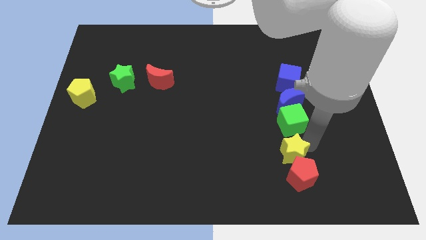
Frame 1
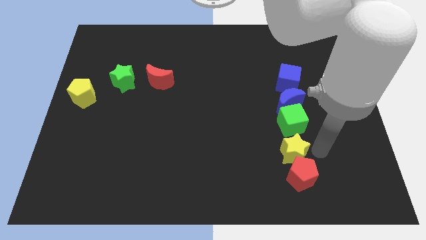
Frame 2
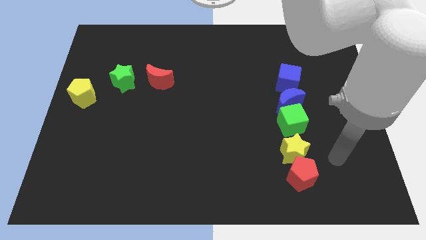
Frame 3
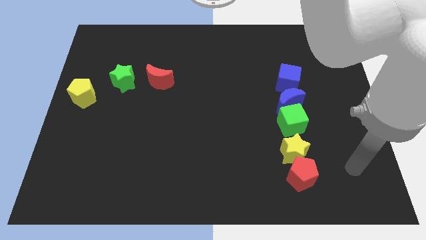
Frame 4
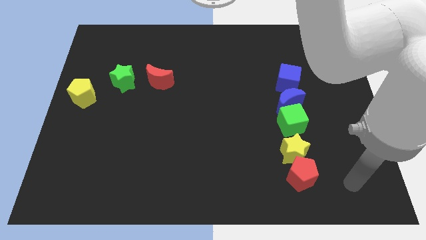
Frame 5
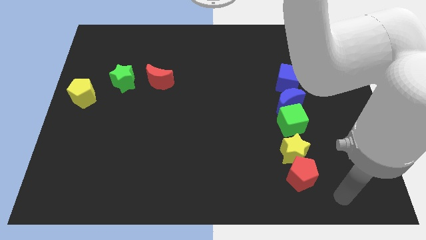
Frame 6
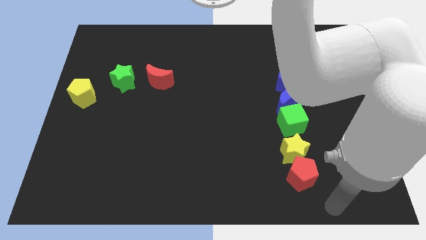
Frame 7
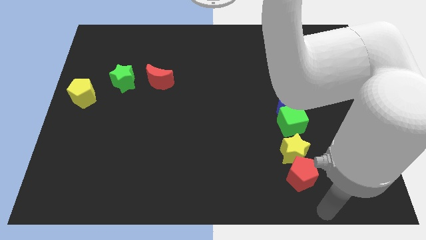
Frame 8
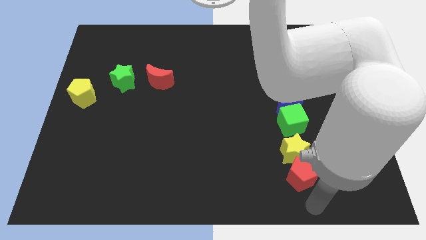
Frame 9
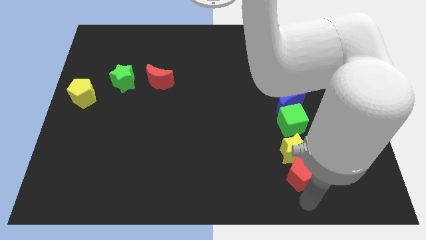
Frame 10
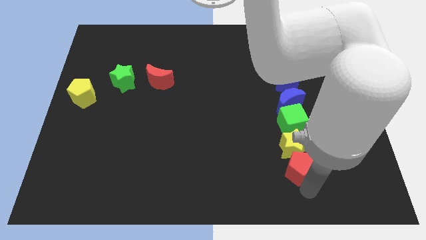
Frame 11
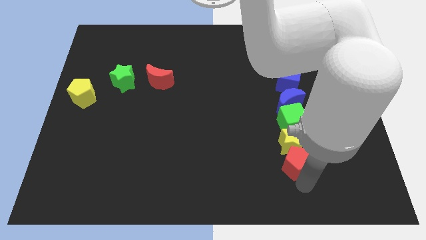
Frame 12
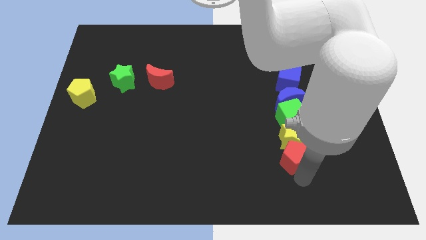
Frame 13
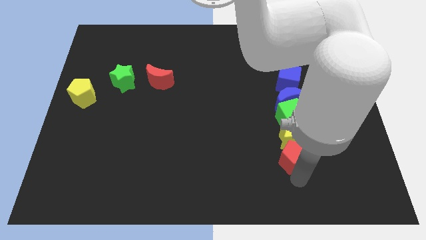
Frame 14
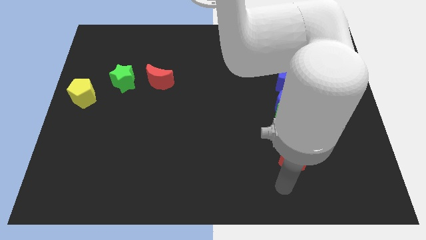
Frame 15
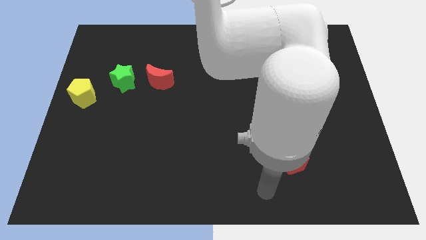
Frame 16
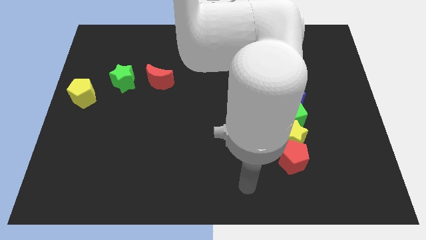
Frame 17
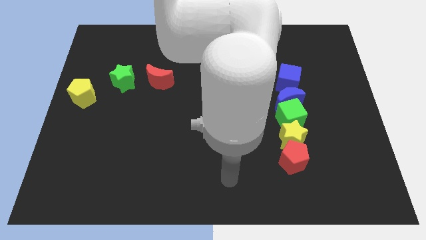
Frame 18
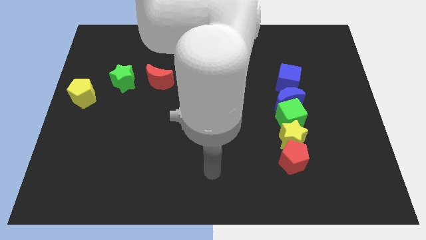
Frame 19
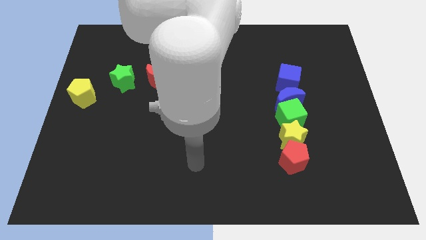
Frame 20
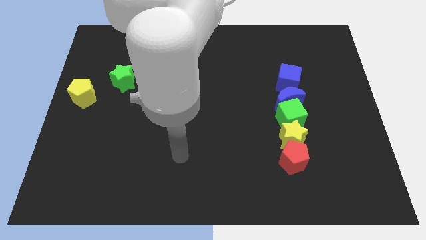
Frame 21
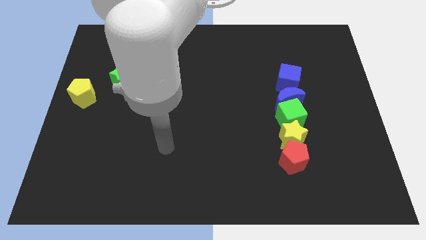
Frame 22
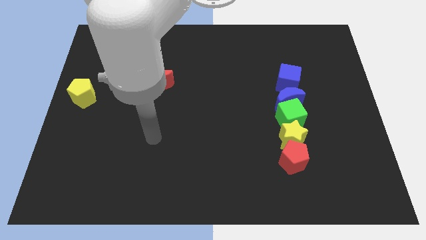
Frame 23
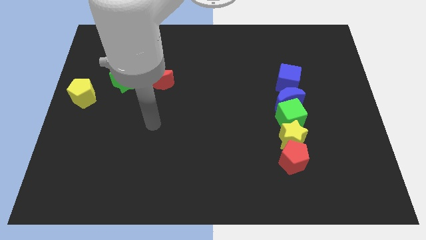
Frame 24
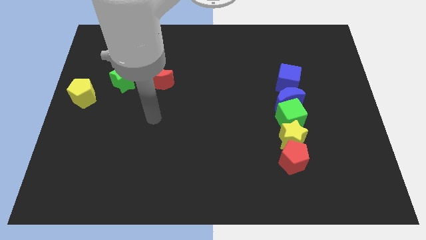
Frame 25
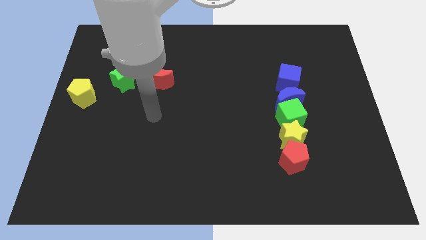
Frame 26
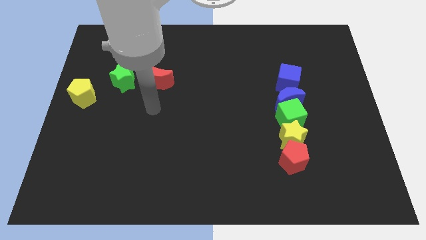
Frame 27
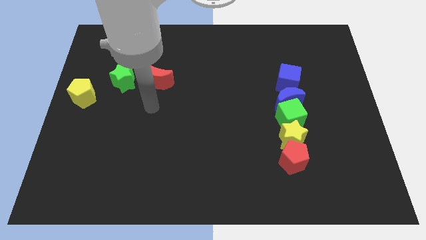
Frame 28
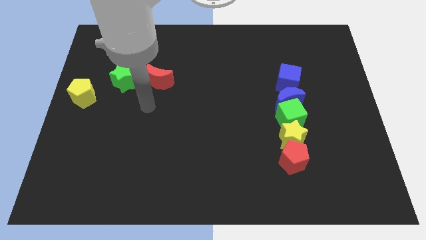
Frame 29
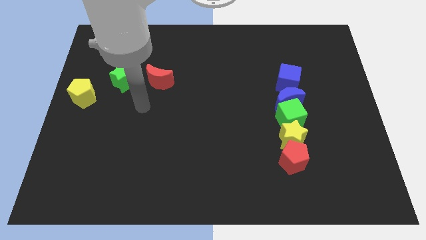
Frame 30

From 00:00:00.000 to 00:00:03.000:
push the red pentagon into the yellow star

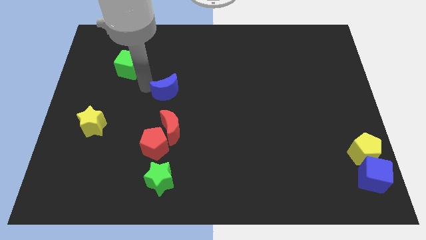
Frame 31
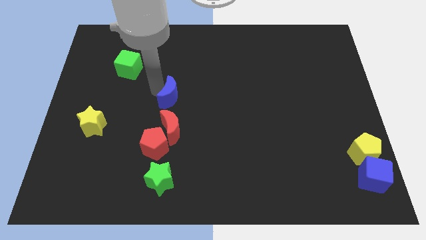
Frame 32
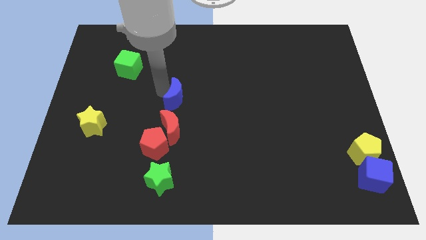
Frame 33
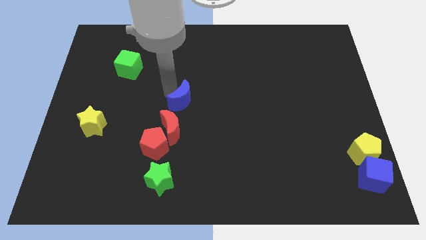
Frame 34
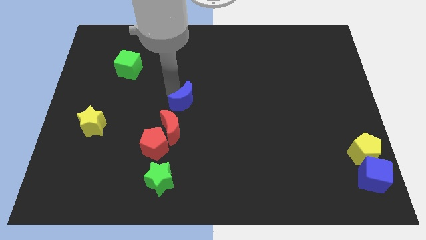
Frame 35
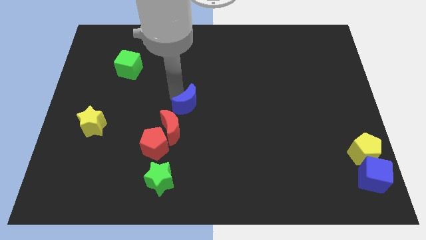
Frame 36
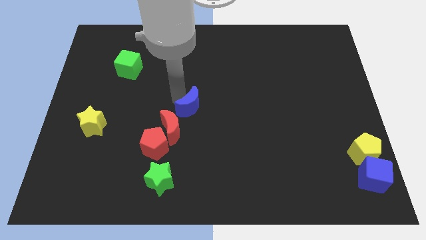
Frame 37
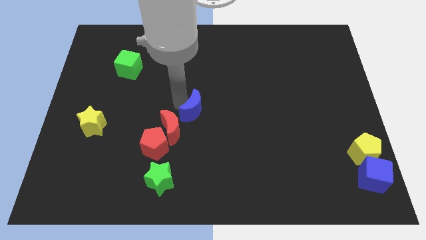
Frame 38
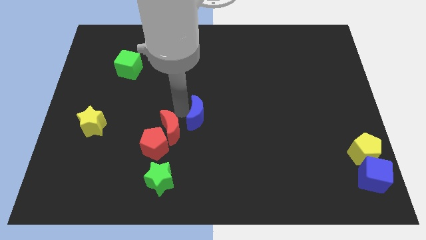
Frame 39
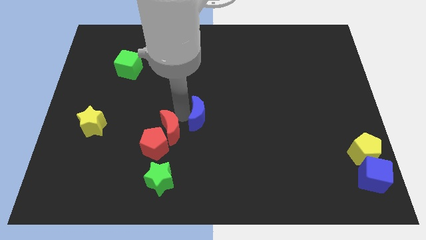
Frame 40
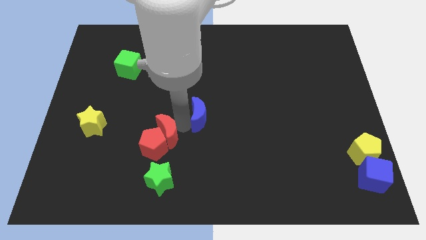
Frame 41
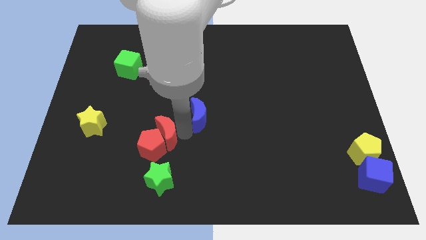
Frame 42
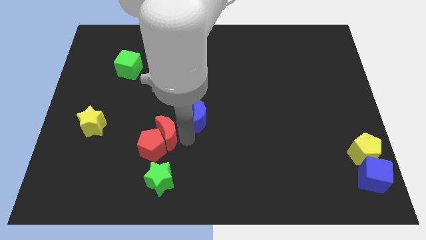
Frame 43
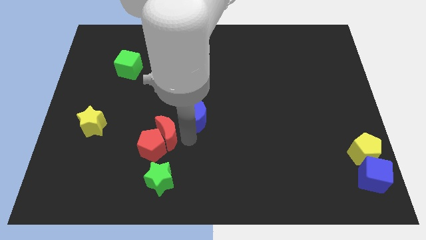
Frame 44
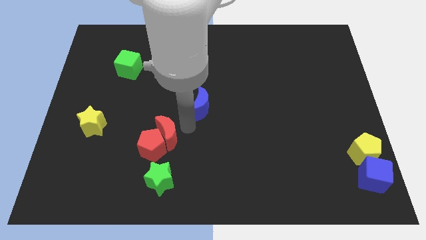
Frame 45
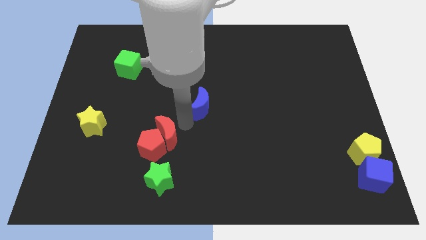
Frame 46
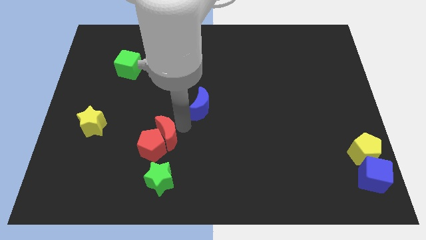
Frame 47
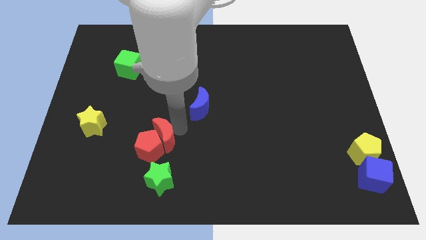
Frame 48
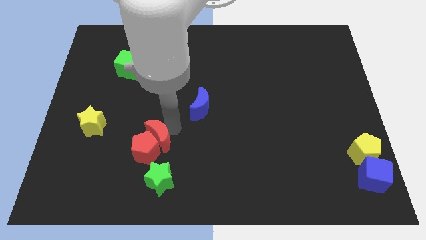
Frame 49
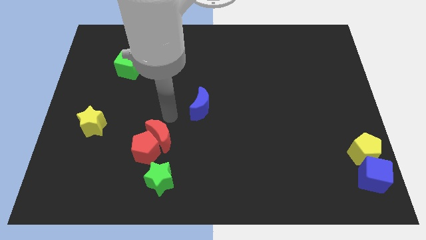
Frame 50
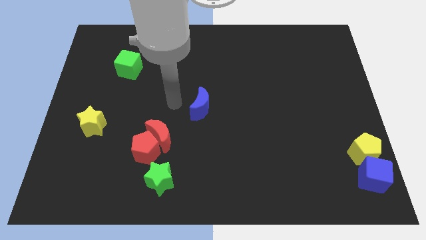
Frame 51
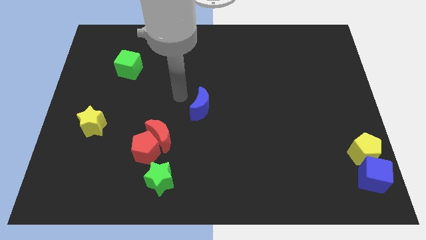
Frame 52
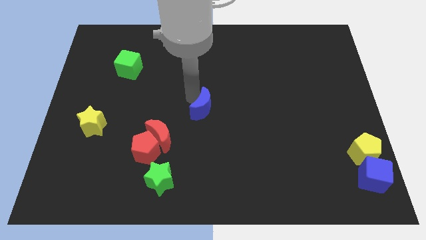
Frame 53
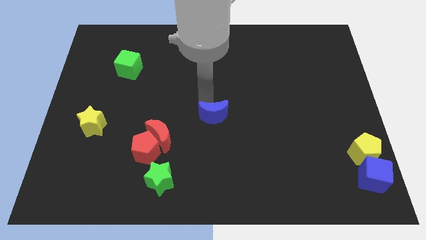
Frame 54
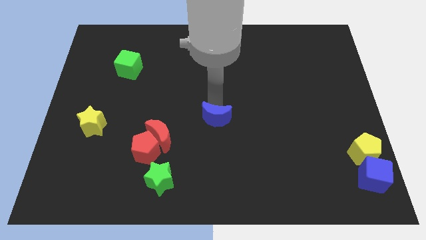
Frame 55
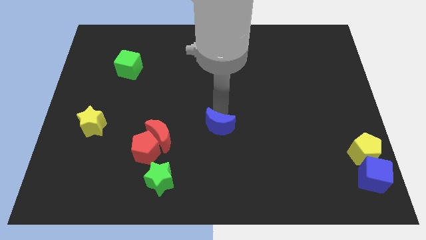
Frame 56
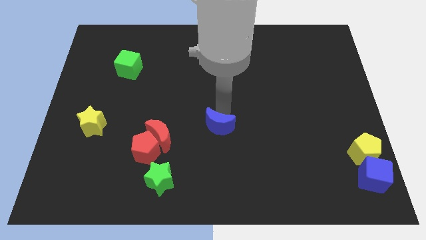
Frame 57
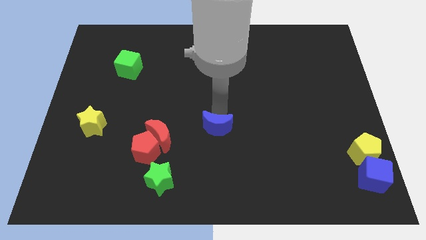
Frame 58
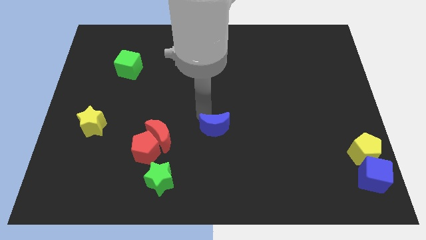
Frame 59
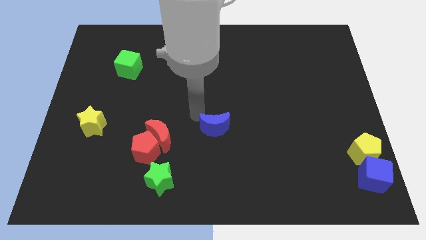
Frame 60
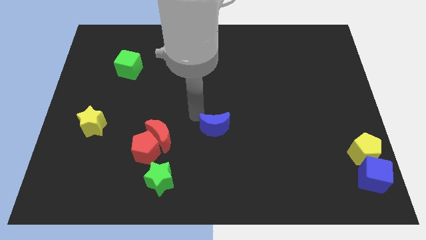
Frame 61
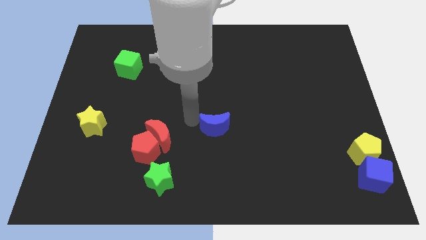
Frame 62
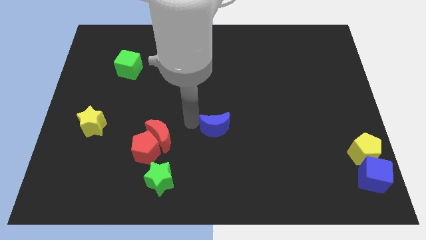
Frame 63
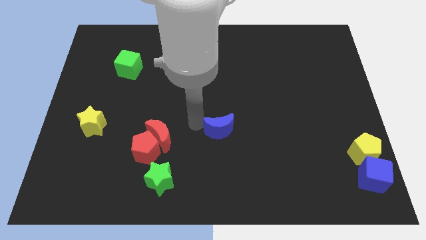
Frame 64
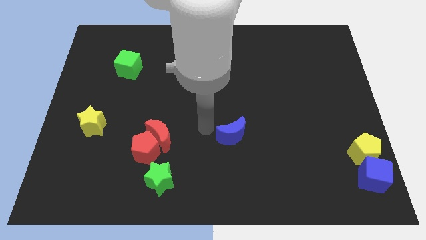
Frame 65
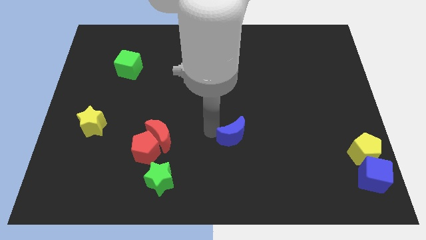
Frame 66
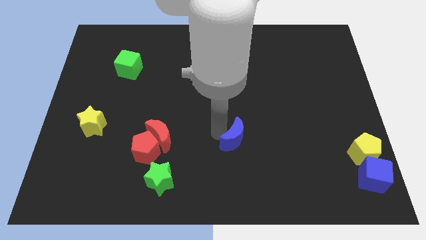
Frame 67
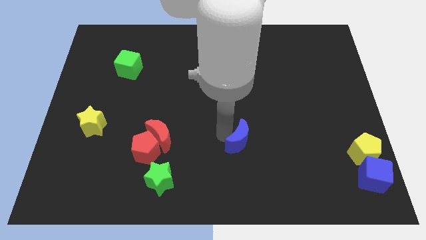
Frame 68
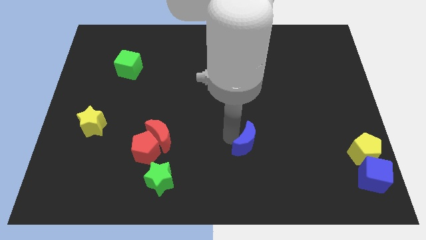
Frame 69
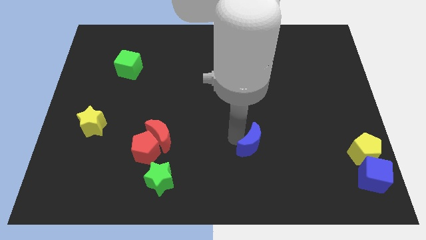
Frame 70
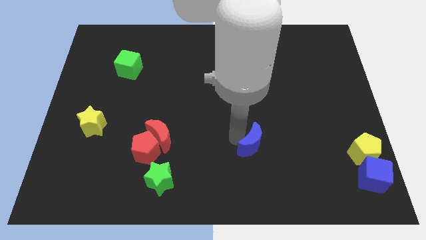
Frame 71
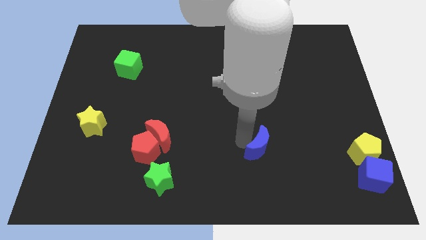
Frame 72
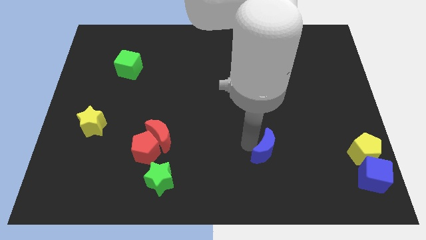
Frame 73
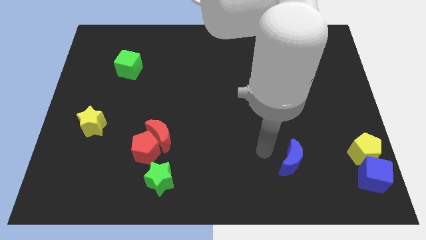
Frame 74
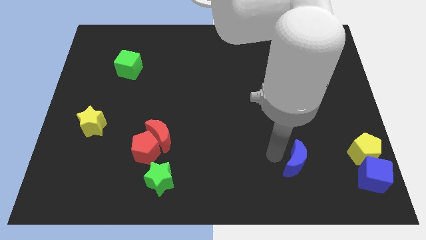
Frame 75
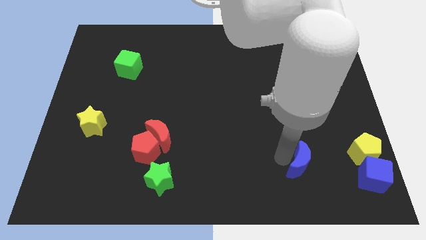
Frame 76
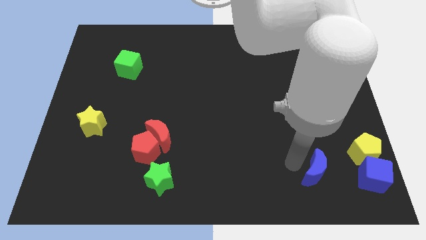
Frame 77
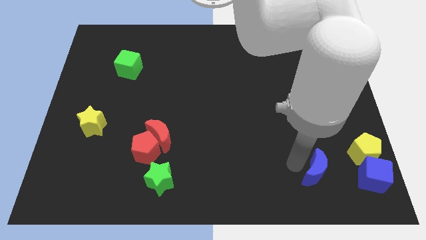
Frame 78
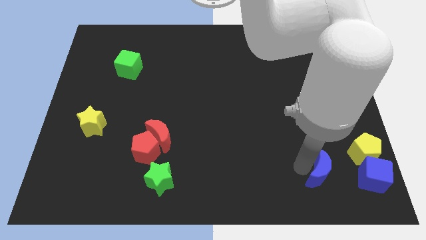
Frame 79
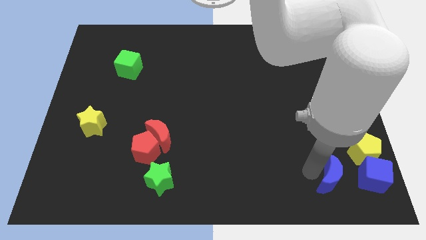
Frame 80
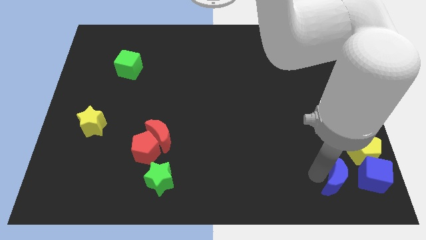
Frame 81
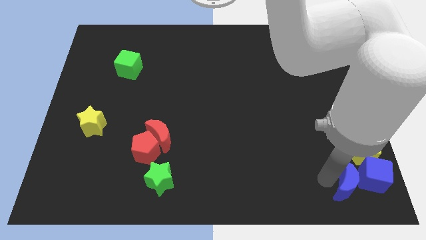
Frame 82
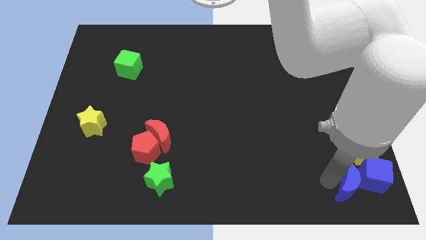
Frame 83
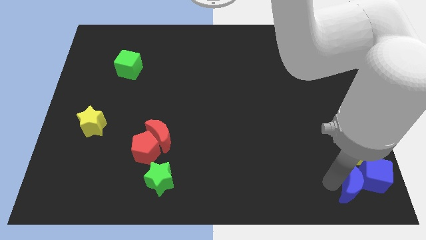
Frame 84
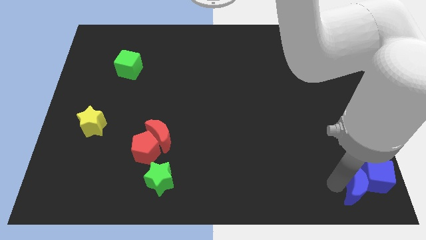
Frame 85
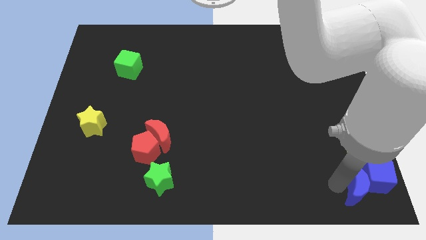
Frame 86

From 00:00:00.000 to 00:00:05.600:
place the blue moon to the left of blue cube

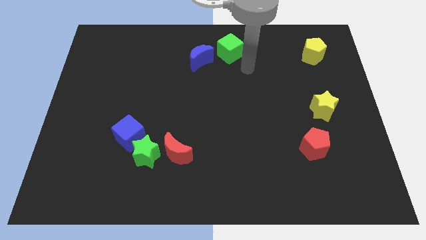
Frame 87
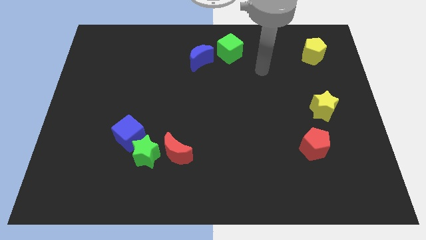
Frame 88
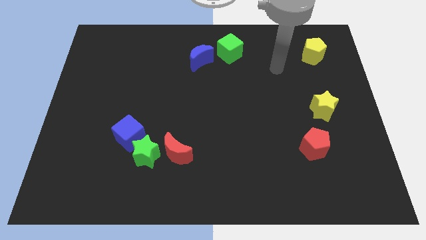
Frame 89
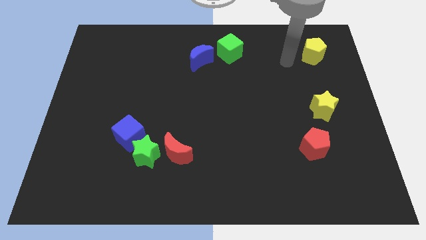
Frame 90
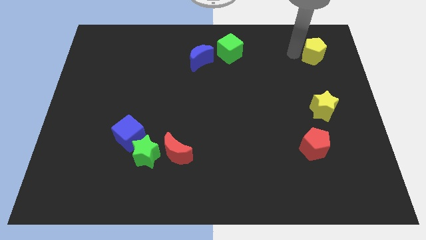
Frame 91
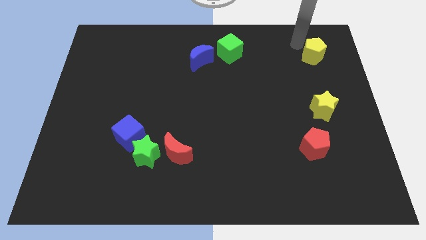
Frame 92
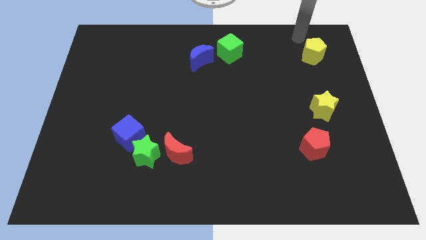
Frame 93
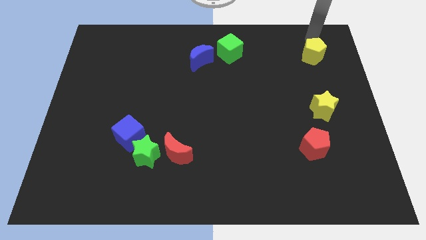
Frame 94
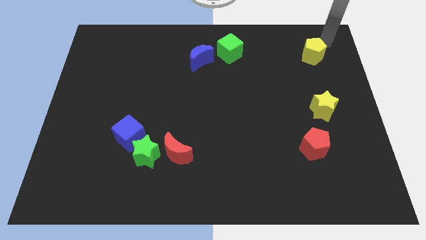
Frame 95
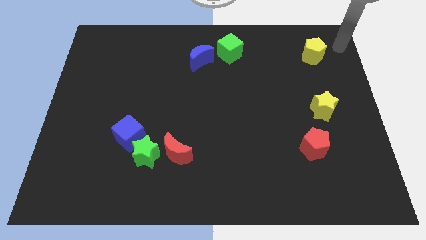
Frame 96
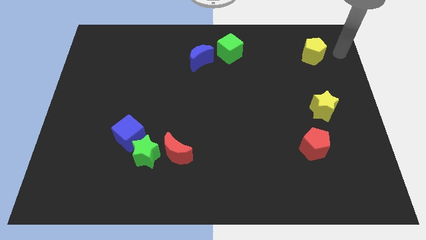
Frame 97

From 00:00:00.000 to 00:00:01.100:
point your arm at the right side of the yellow pentagon
